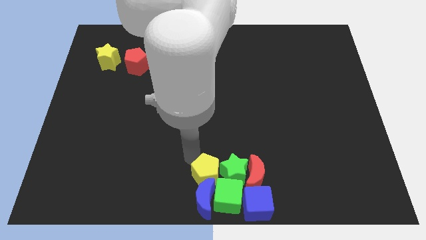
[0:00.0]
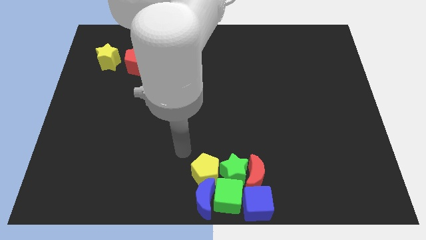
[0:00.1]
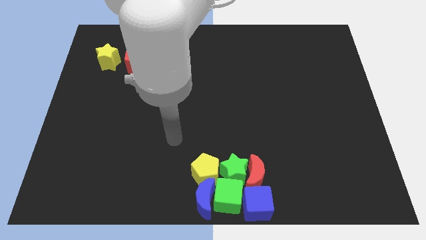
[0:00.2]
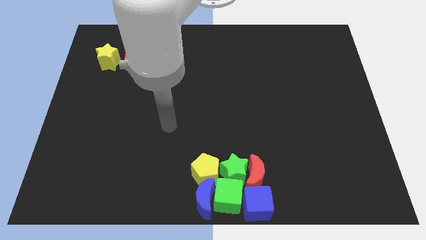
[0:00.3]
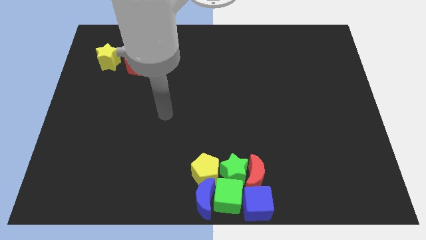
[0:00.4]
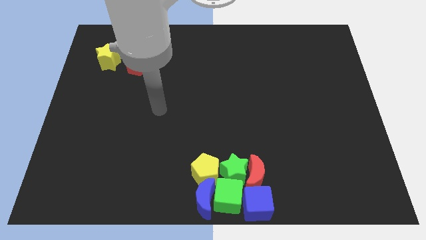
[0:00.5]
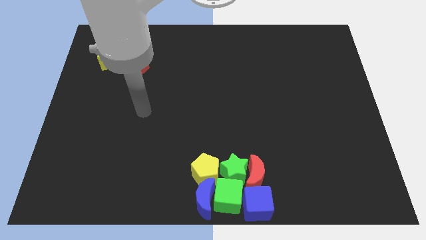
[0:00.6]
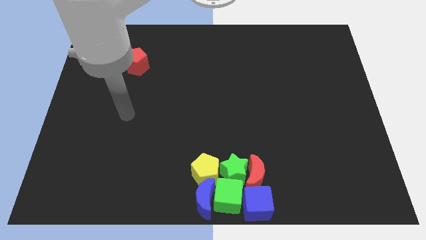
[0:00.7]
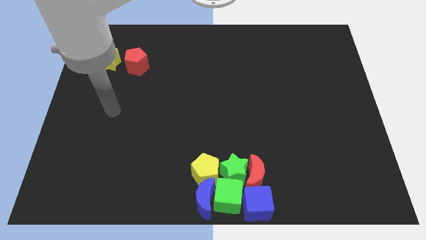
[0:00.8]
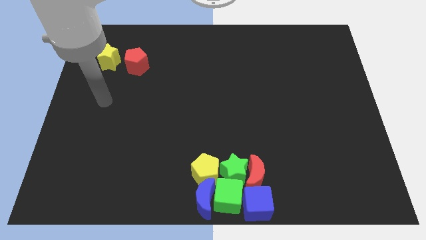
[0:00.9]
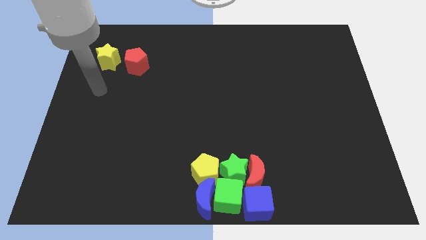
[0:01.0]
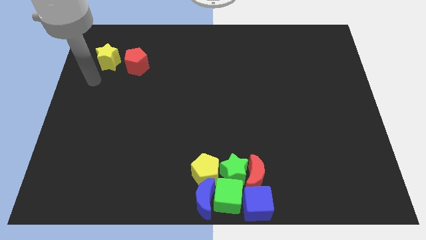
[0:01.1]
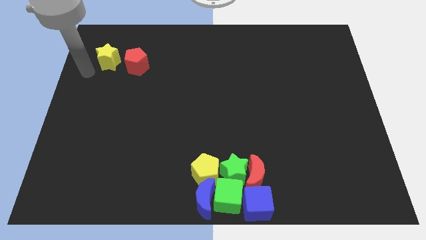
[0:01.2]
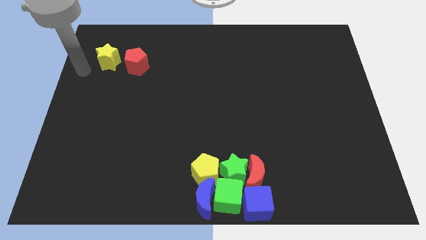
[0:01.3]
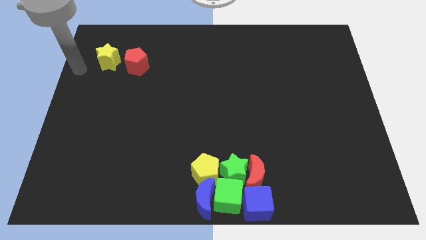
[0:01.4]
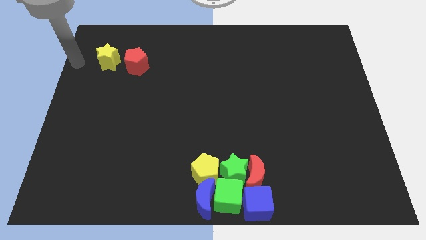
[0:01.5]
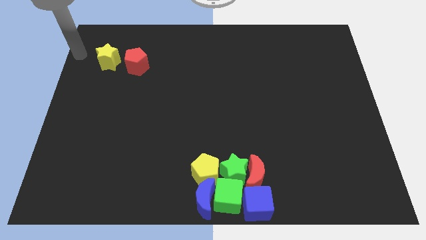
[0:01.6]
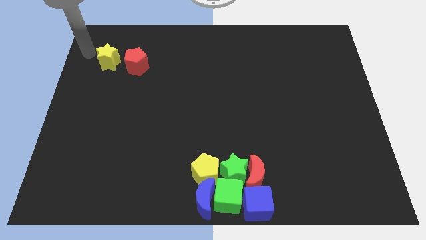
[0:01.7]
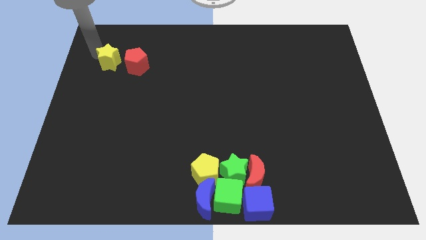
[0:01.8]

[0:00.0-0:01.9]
move your arm way from the yellow pentagon

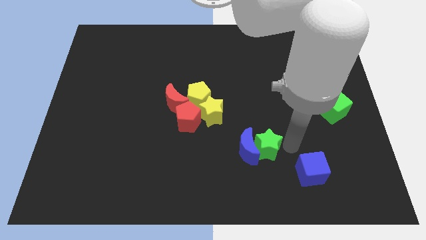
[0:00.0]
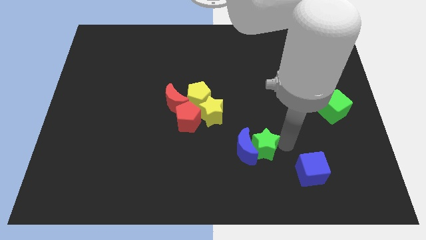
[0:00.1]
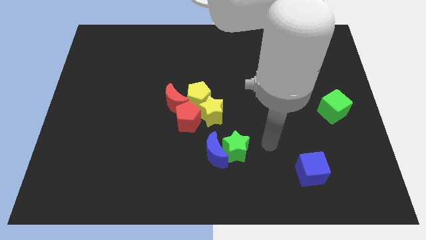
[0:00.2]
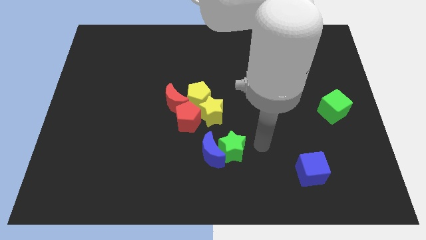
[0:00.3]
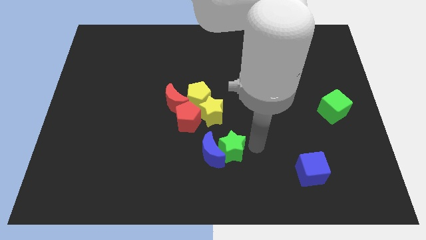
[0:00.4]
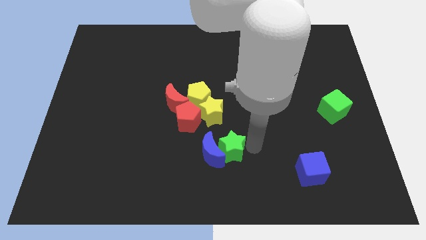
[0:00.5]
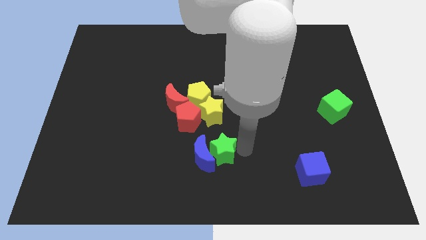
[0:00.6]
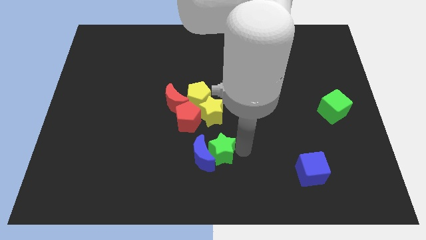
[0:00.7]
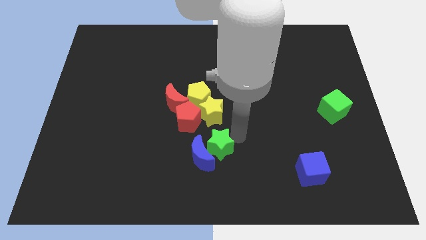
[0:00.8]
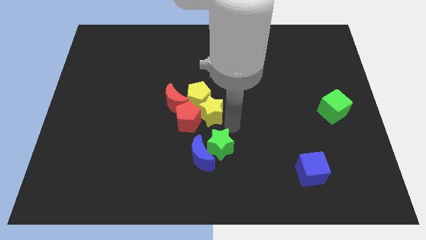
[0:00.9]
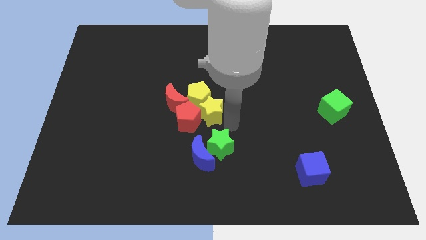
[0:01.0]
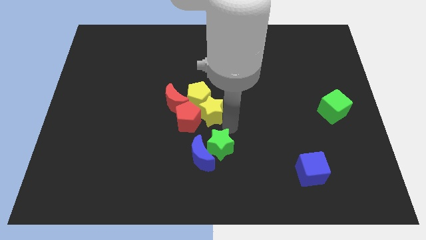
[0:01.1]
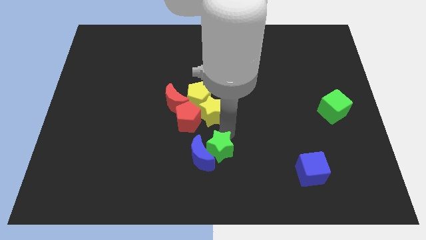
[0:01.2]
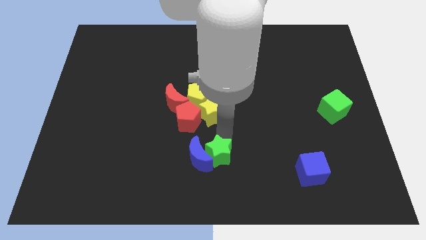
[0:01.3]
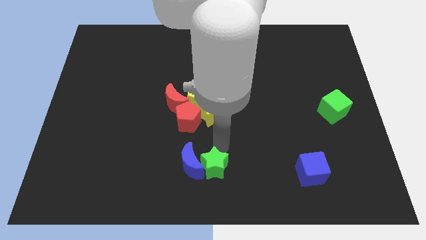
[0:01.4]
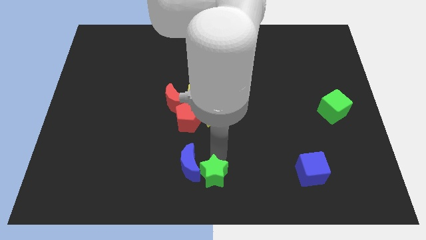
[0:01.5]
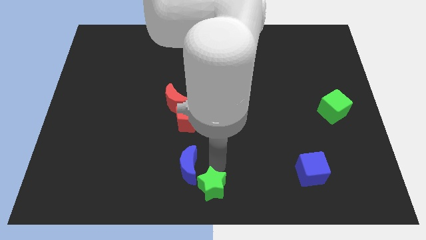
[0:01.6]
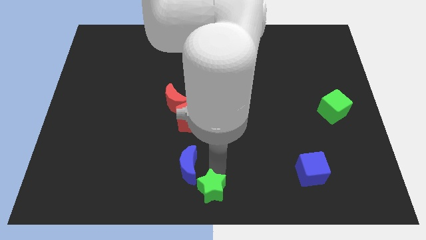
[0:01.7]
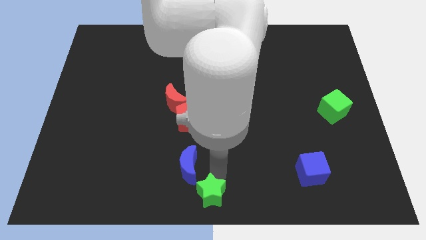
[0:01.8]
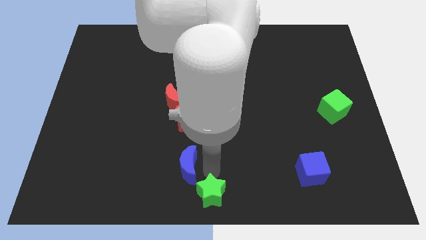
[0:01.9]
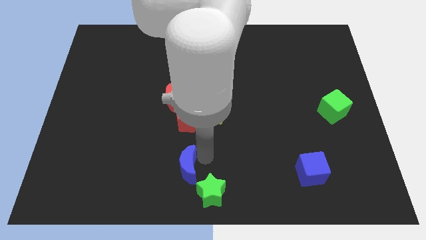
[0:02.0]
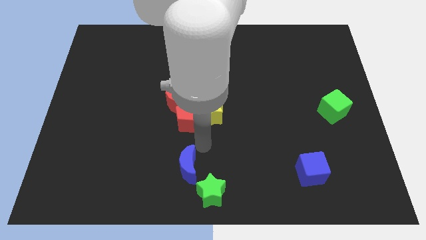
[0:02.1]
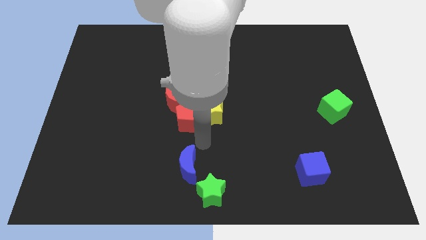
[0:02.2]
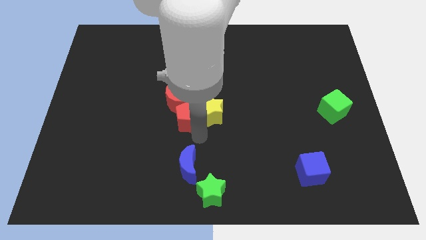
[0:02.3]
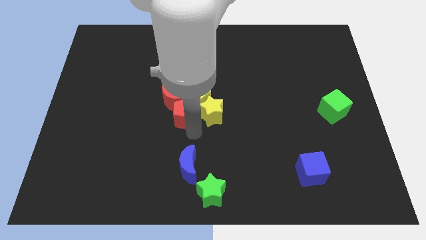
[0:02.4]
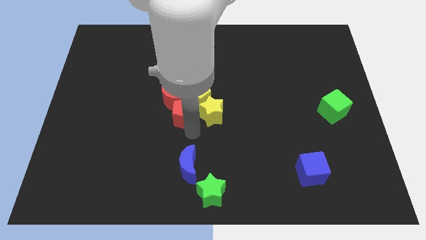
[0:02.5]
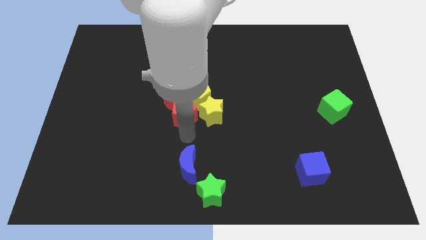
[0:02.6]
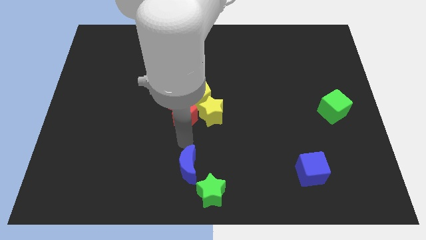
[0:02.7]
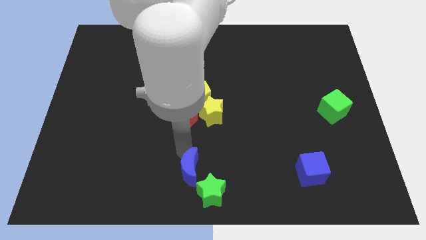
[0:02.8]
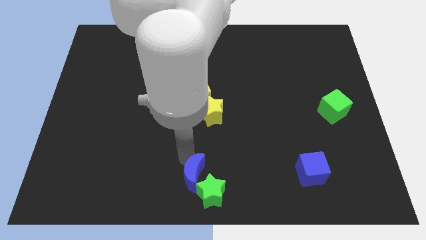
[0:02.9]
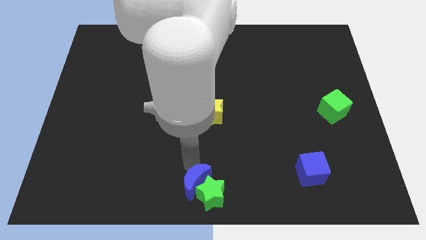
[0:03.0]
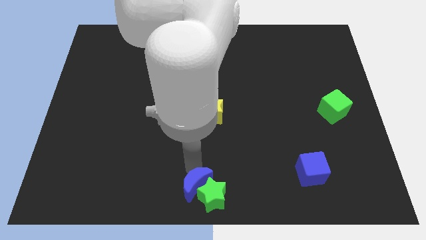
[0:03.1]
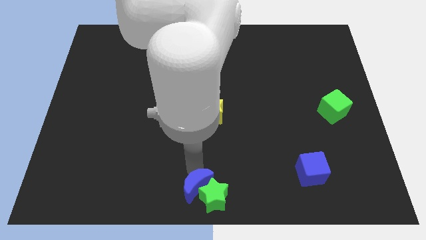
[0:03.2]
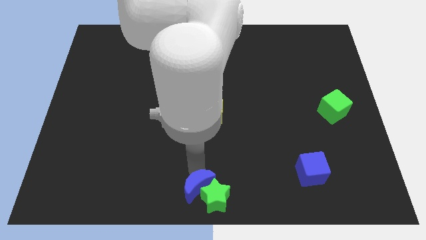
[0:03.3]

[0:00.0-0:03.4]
move the green star along with blue crescent to the bottom center on the board

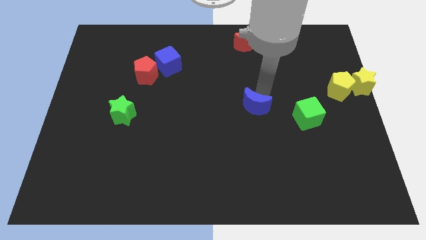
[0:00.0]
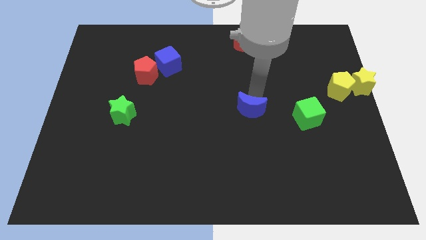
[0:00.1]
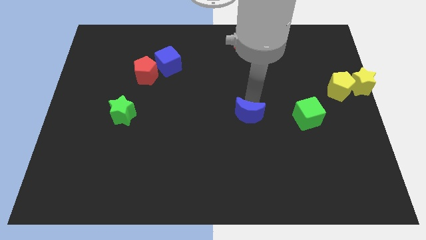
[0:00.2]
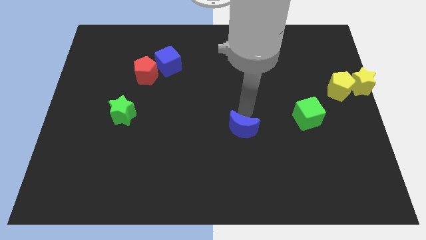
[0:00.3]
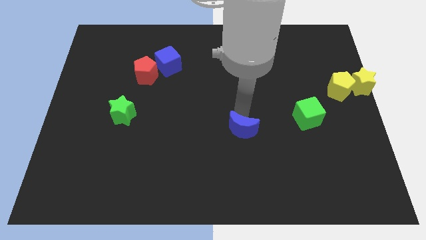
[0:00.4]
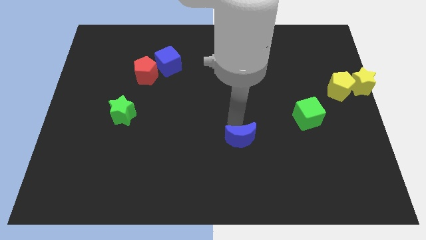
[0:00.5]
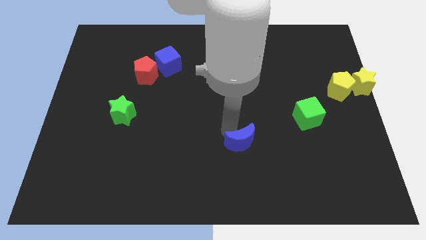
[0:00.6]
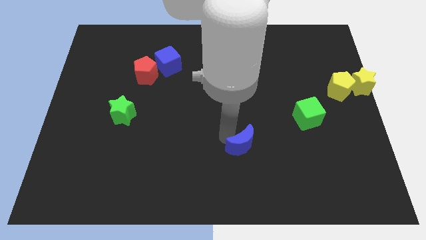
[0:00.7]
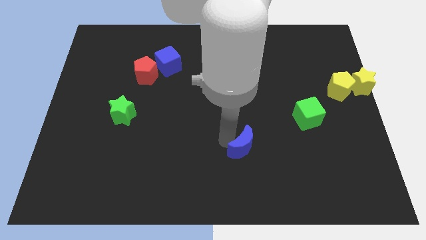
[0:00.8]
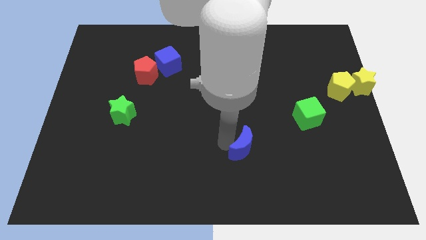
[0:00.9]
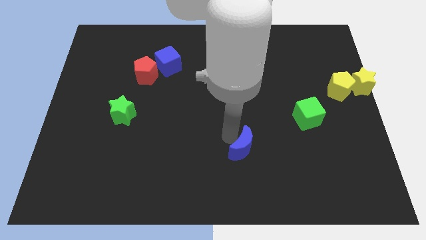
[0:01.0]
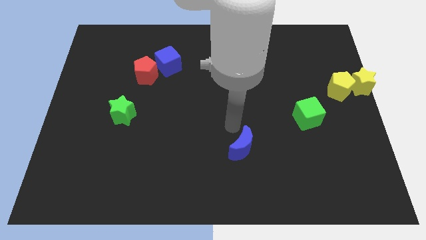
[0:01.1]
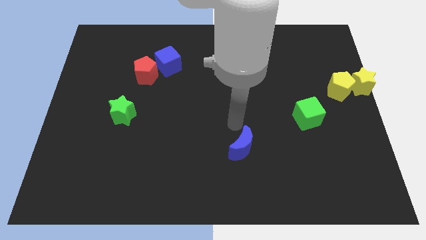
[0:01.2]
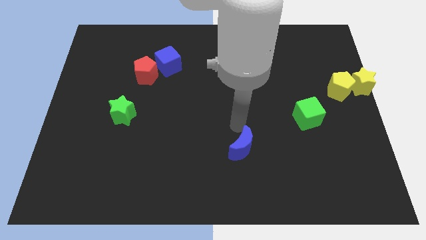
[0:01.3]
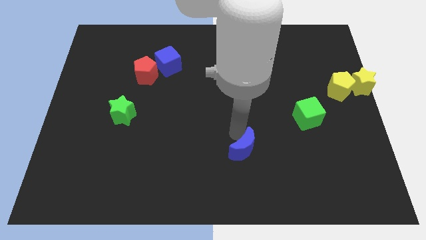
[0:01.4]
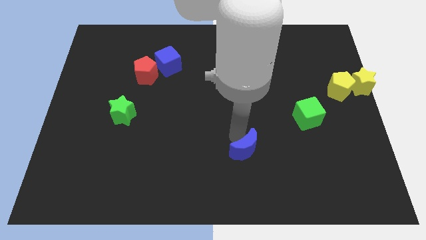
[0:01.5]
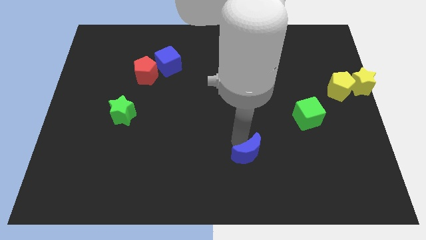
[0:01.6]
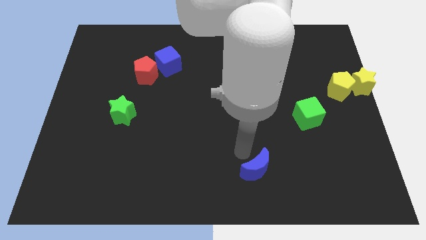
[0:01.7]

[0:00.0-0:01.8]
place the blue crescent at the bottom center

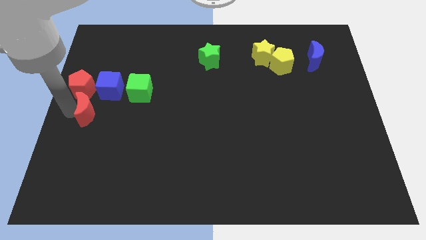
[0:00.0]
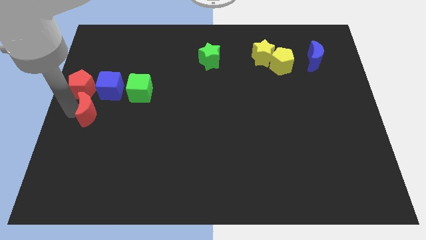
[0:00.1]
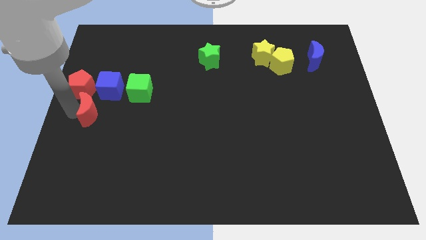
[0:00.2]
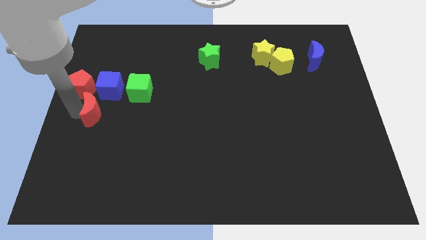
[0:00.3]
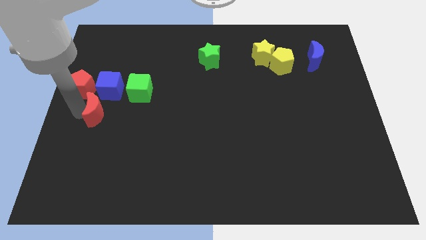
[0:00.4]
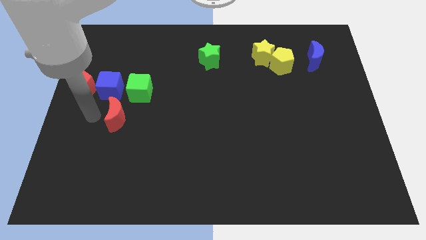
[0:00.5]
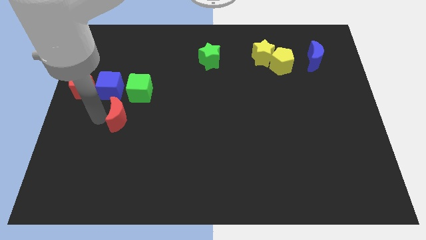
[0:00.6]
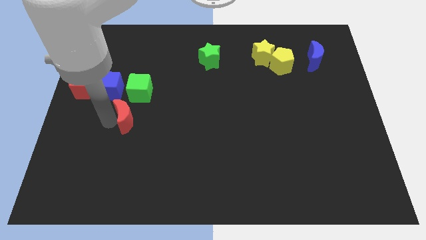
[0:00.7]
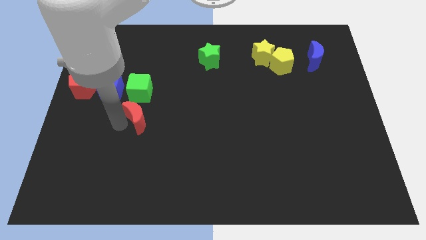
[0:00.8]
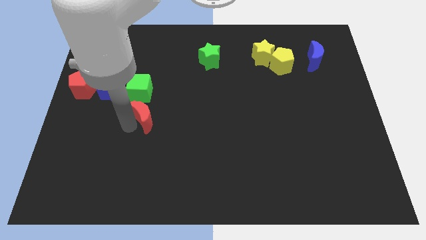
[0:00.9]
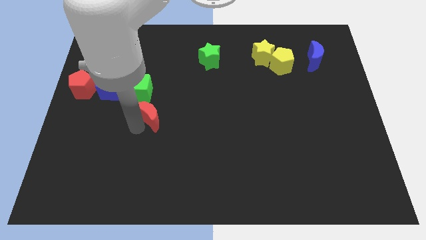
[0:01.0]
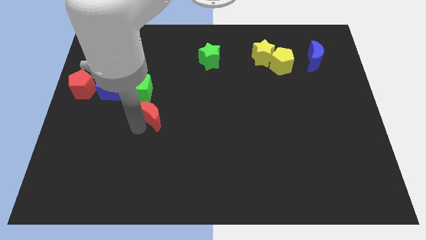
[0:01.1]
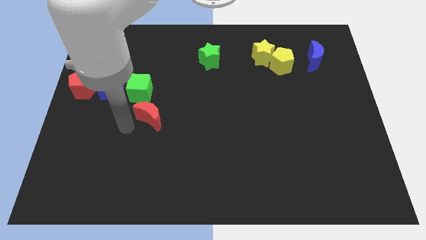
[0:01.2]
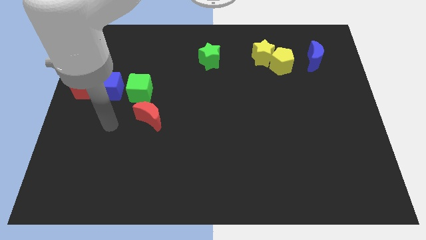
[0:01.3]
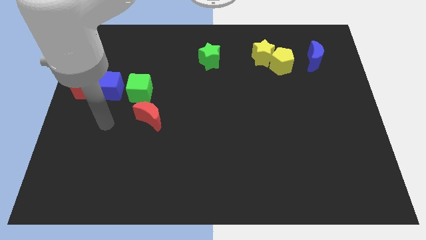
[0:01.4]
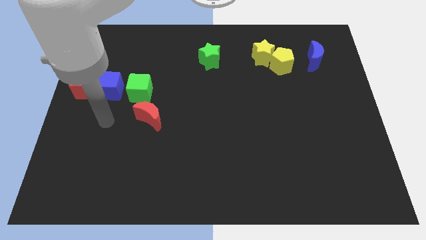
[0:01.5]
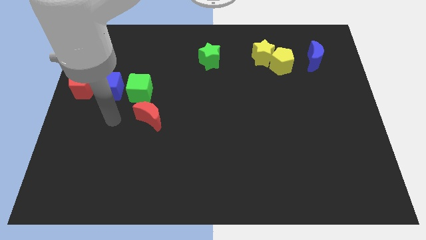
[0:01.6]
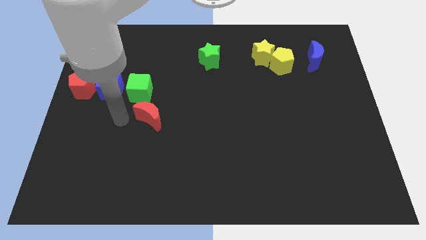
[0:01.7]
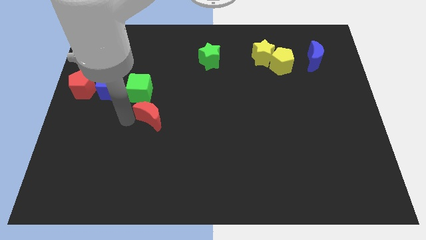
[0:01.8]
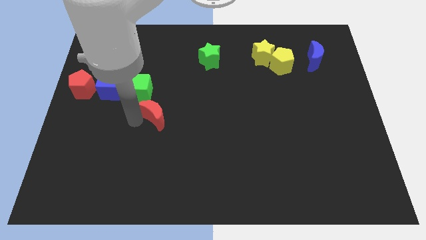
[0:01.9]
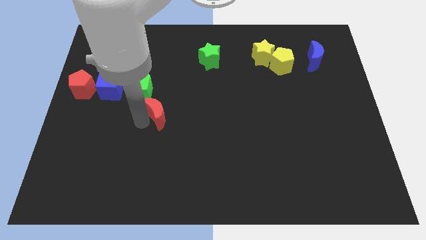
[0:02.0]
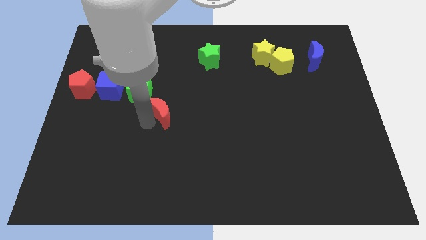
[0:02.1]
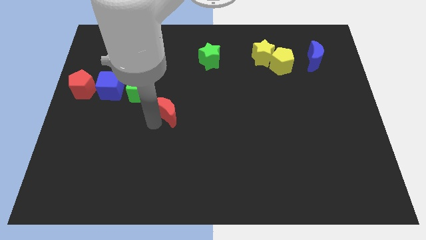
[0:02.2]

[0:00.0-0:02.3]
move red moon to the center of the board
